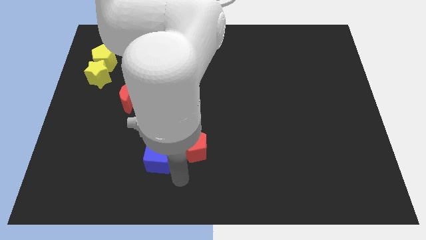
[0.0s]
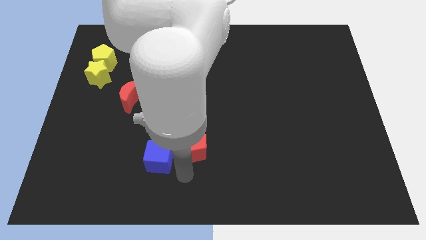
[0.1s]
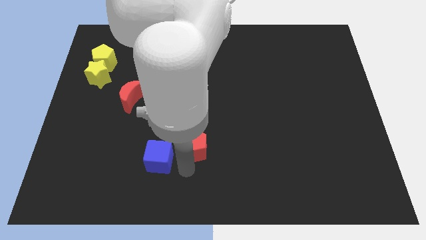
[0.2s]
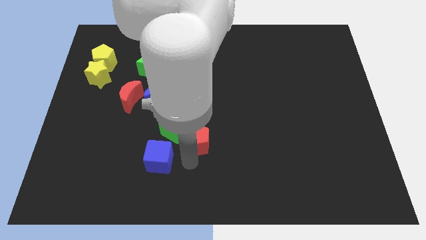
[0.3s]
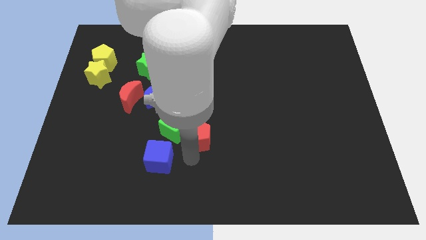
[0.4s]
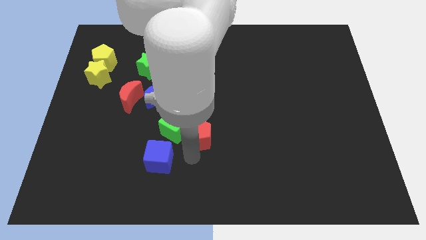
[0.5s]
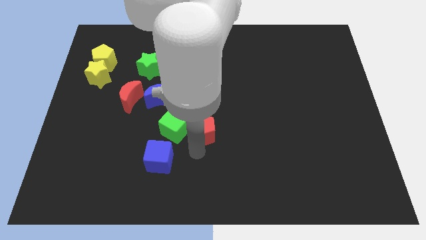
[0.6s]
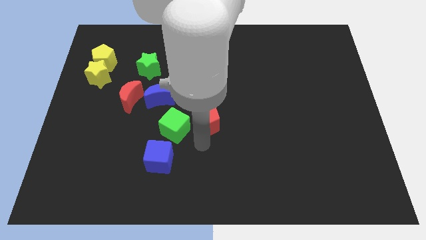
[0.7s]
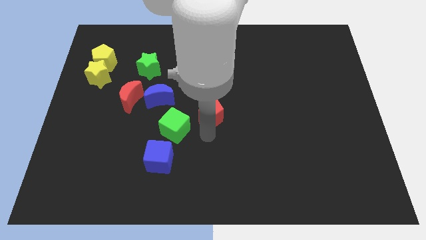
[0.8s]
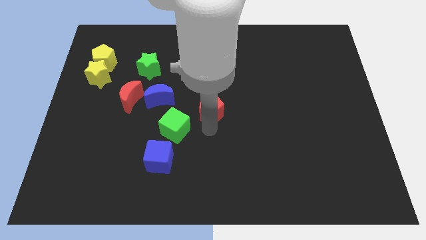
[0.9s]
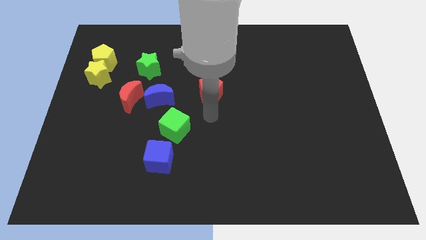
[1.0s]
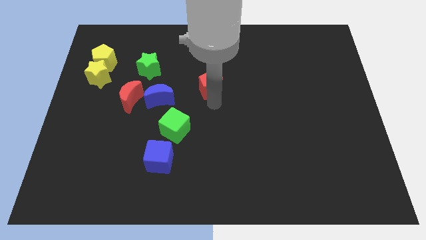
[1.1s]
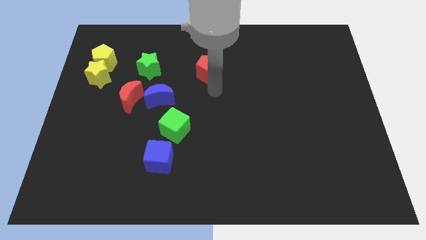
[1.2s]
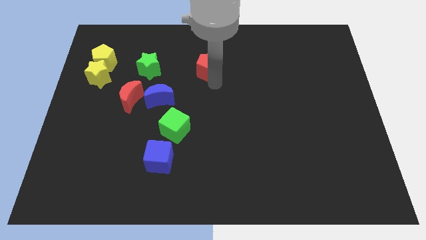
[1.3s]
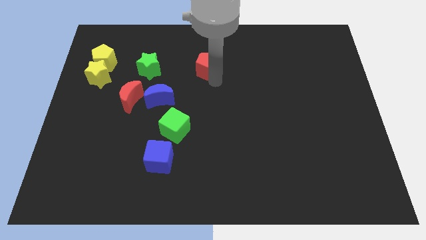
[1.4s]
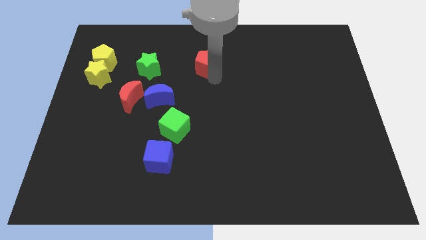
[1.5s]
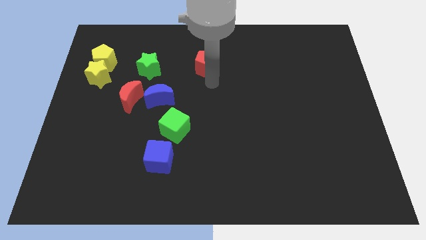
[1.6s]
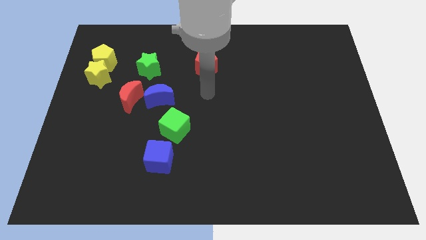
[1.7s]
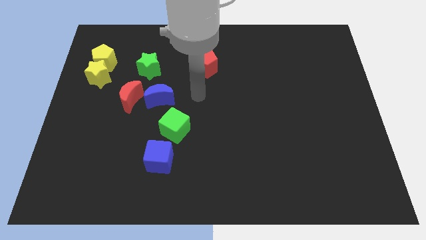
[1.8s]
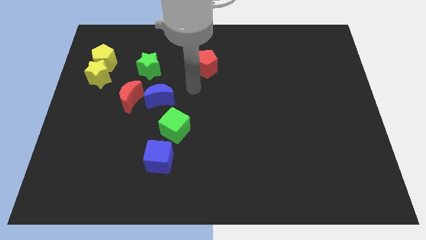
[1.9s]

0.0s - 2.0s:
move the red pentagon to the top of the board

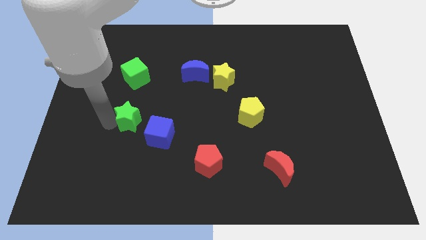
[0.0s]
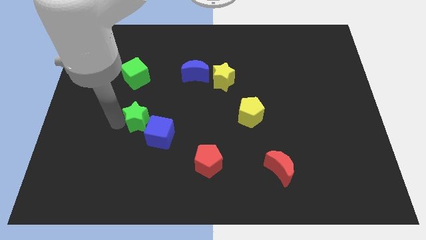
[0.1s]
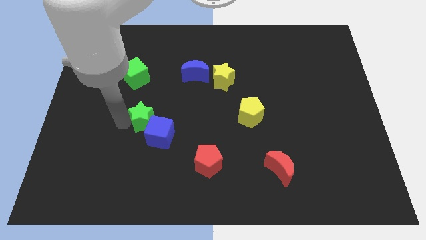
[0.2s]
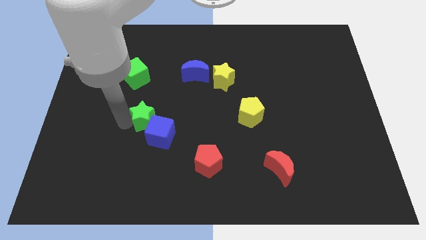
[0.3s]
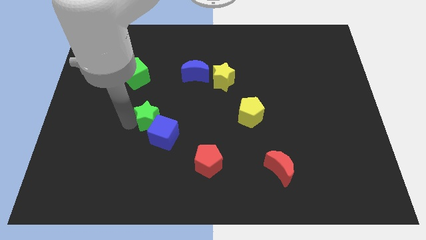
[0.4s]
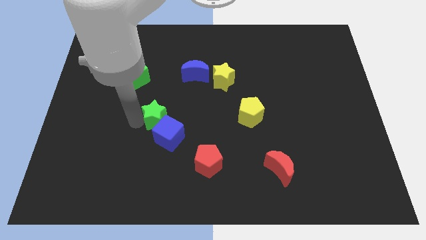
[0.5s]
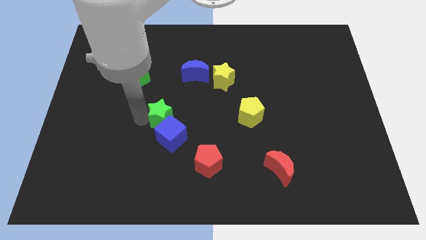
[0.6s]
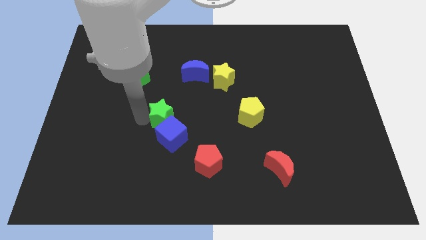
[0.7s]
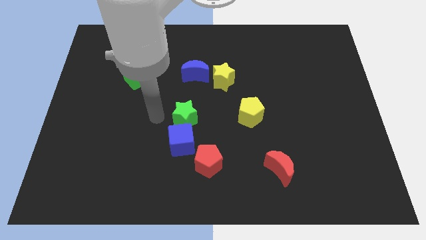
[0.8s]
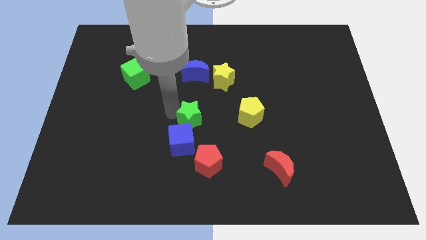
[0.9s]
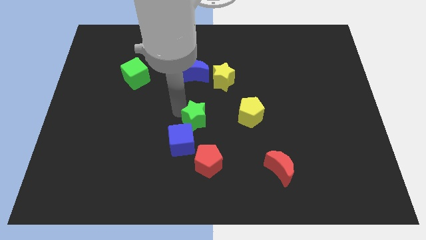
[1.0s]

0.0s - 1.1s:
place the green star vertical to the blue moon

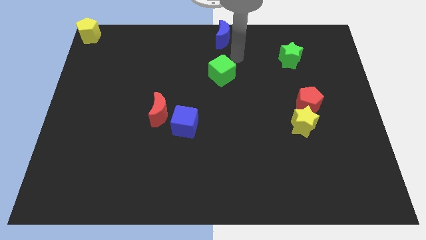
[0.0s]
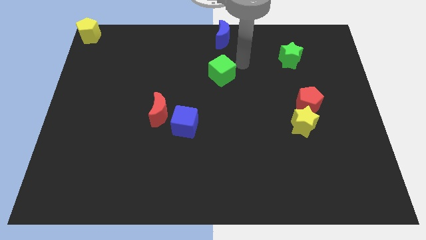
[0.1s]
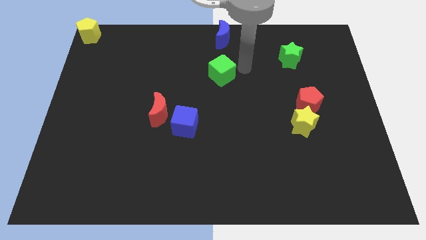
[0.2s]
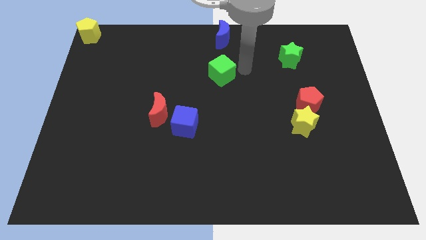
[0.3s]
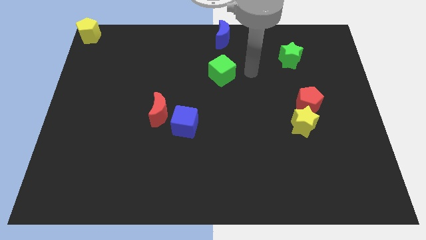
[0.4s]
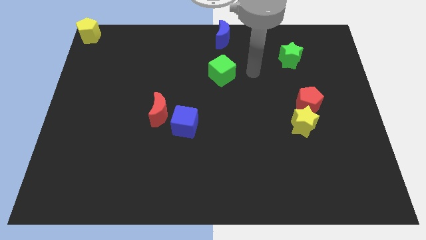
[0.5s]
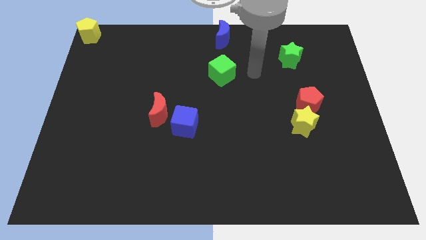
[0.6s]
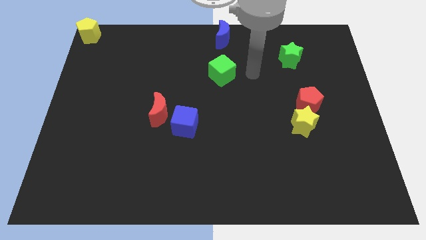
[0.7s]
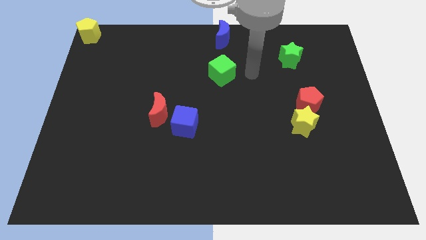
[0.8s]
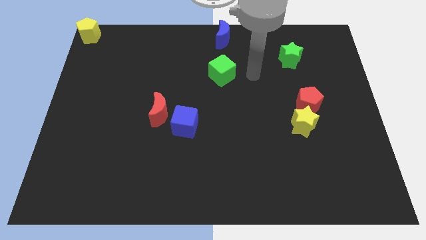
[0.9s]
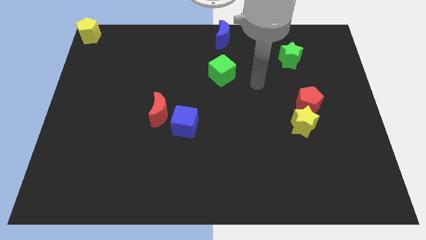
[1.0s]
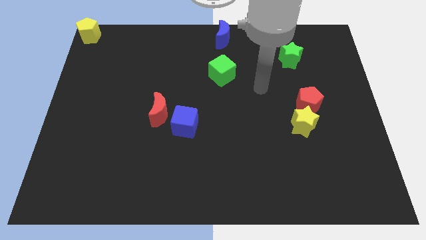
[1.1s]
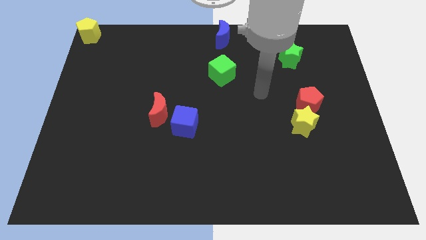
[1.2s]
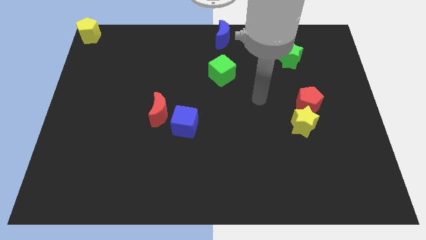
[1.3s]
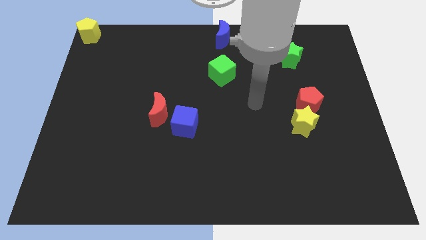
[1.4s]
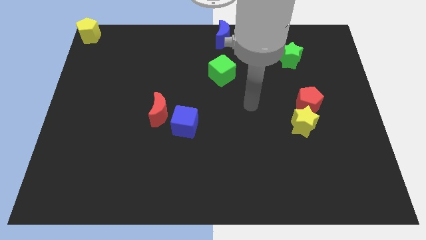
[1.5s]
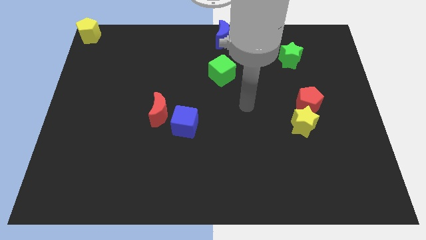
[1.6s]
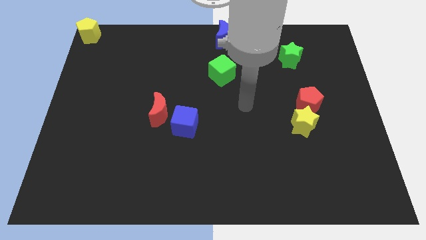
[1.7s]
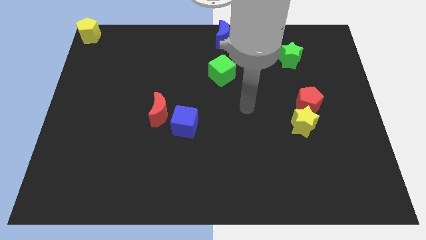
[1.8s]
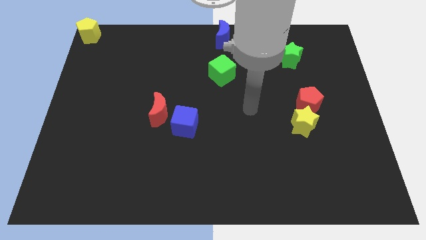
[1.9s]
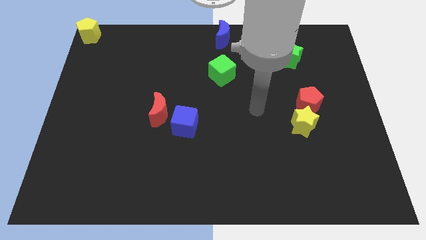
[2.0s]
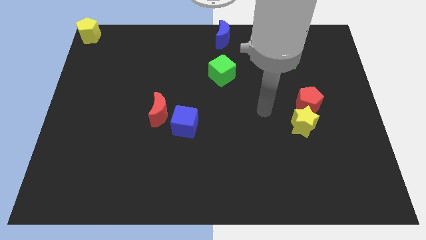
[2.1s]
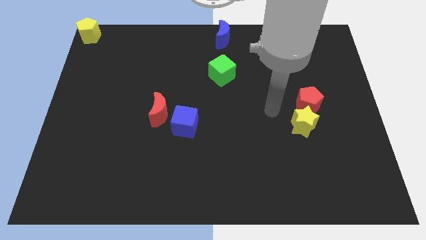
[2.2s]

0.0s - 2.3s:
move the arm towards the yellow star

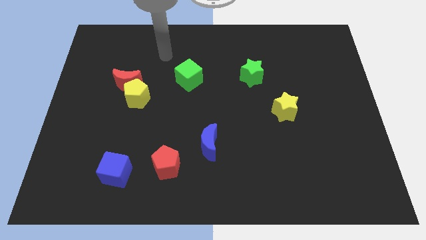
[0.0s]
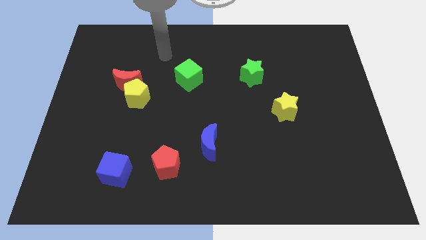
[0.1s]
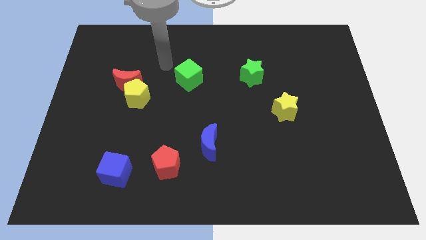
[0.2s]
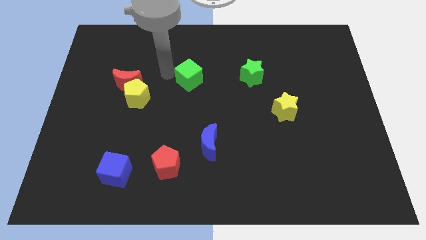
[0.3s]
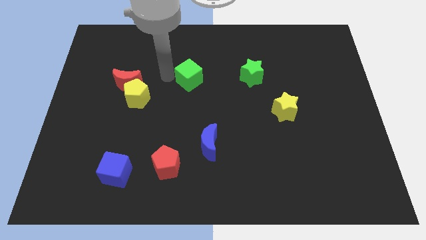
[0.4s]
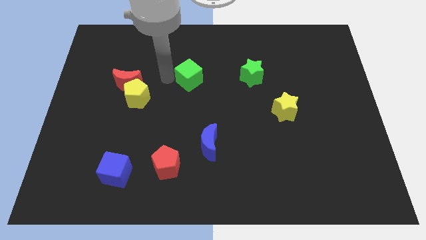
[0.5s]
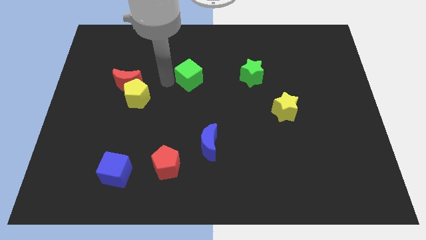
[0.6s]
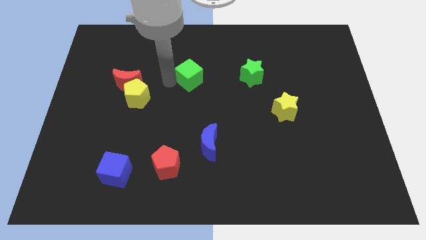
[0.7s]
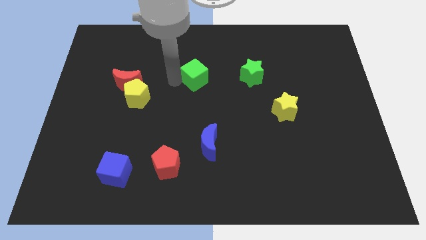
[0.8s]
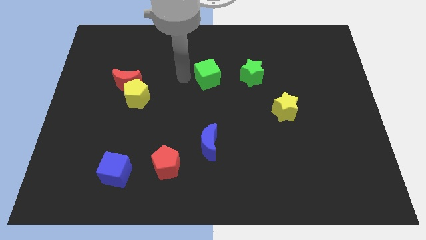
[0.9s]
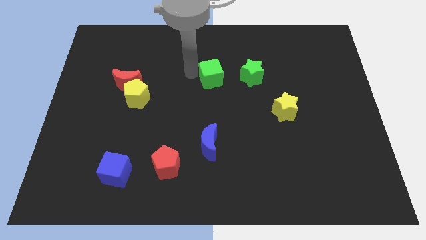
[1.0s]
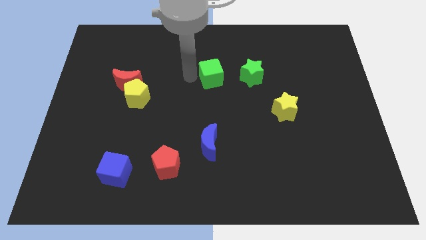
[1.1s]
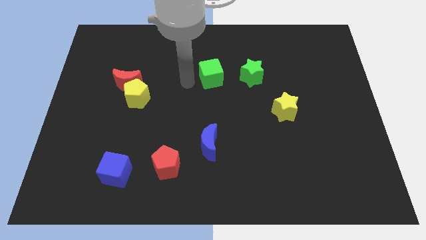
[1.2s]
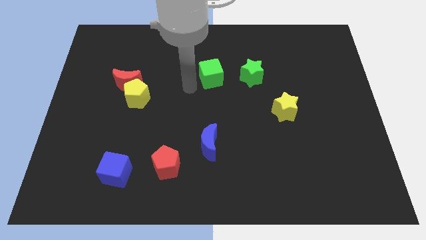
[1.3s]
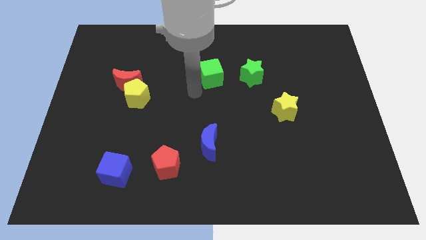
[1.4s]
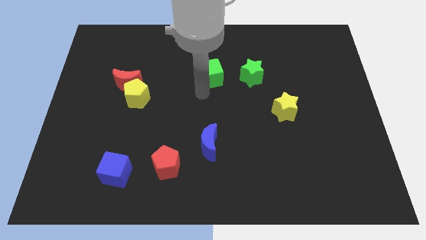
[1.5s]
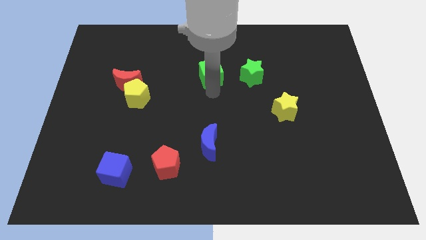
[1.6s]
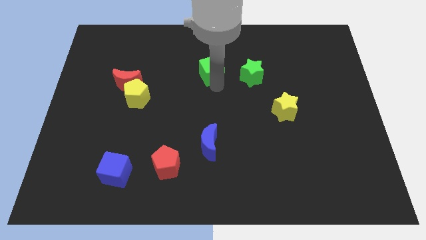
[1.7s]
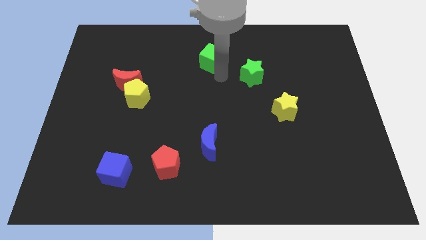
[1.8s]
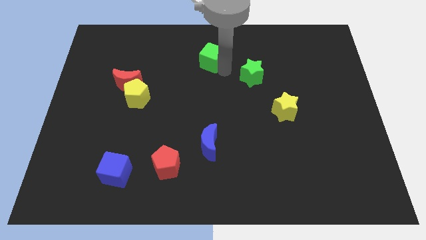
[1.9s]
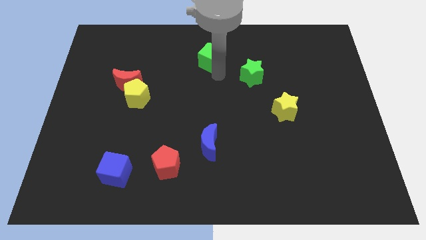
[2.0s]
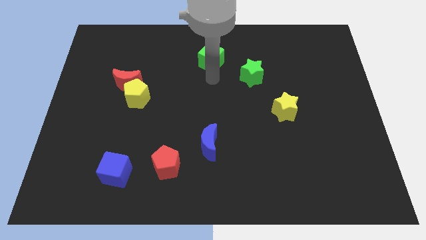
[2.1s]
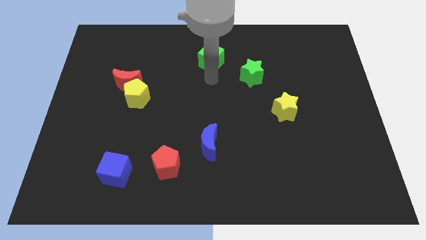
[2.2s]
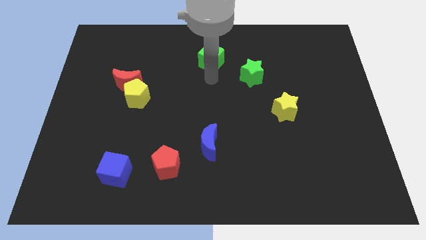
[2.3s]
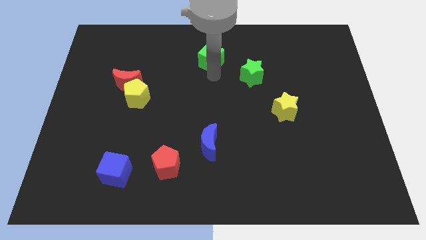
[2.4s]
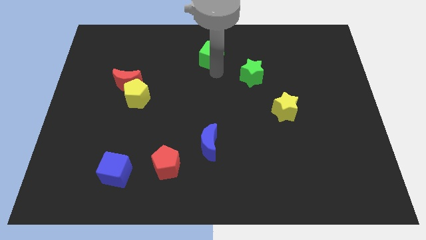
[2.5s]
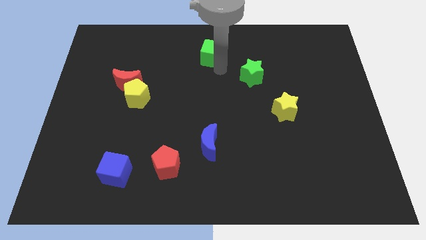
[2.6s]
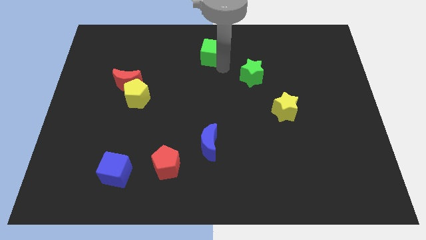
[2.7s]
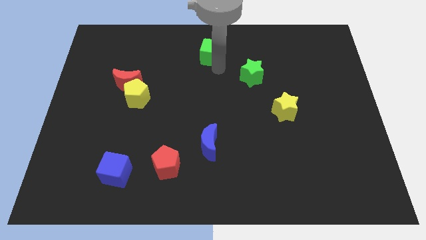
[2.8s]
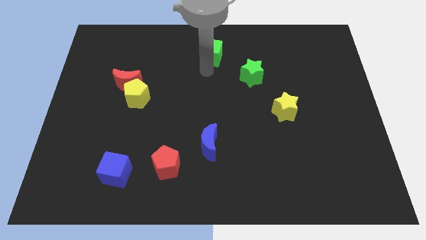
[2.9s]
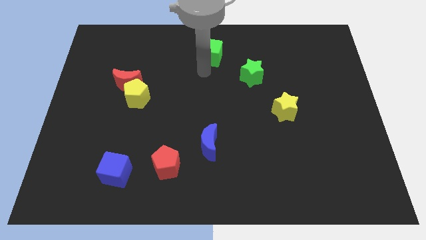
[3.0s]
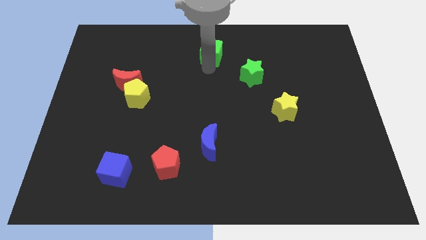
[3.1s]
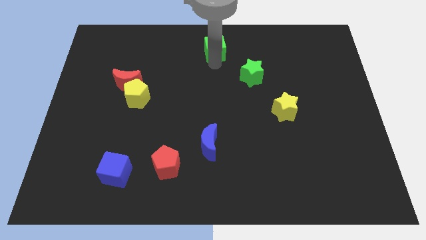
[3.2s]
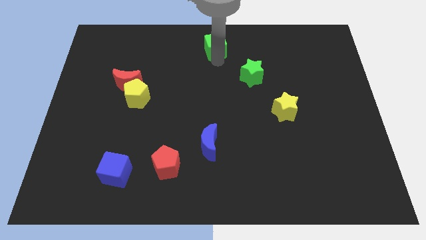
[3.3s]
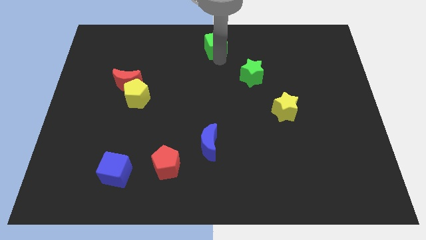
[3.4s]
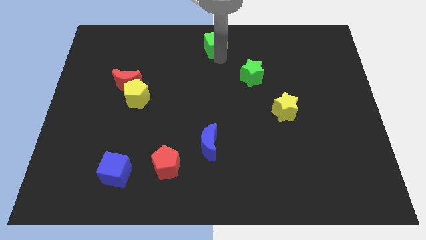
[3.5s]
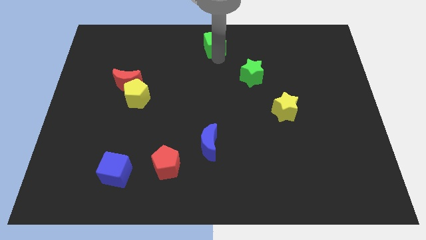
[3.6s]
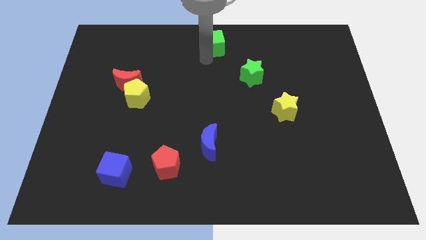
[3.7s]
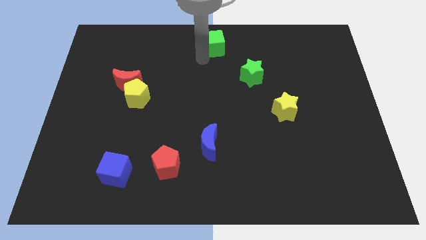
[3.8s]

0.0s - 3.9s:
place the green cube at the top center
